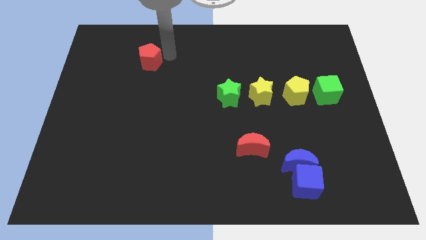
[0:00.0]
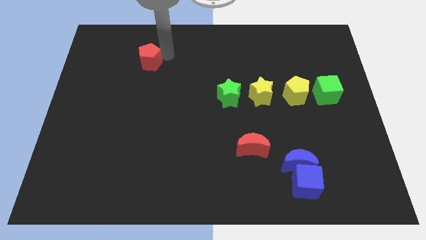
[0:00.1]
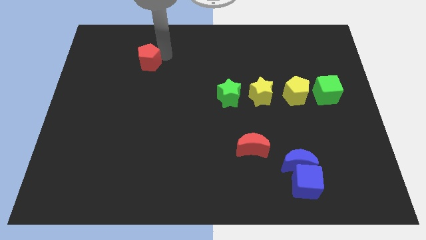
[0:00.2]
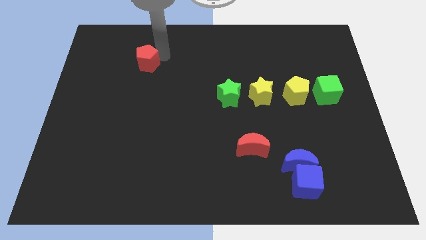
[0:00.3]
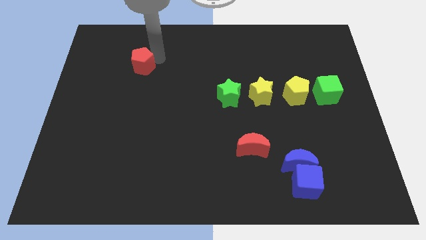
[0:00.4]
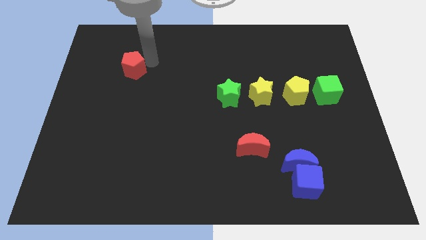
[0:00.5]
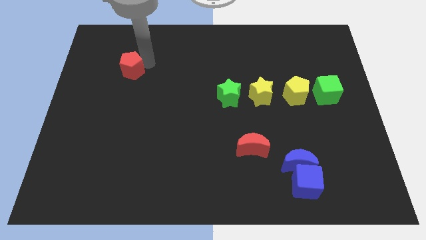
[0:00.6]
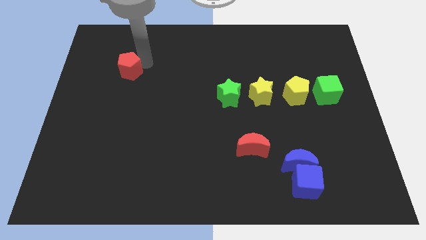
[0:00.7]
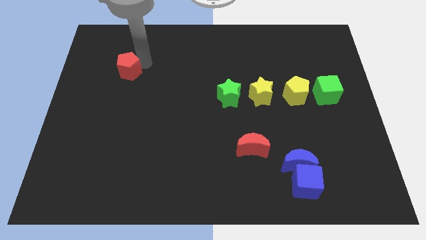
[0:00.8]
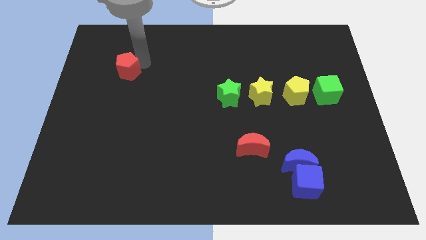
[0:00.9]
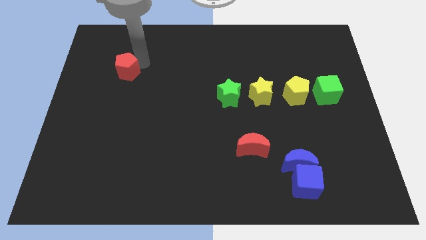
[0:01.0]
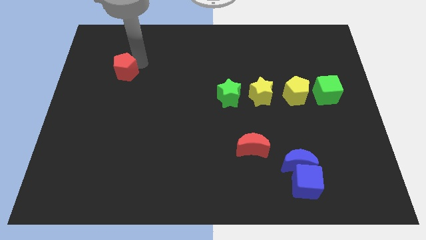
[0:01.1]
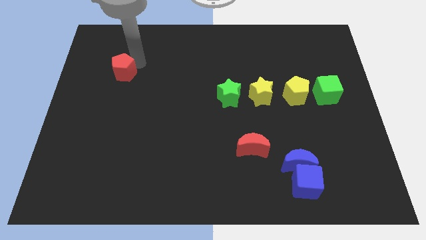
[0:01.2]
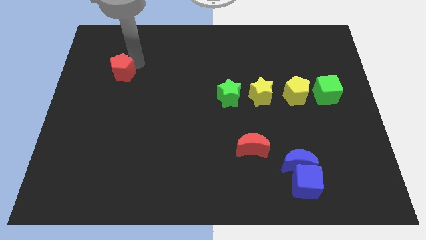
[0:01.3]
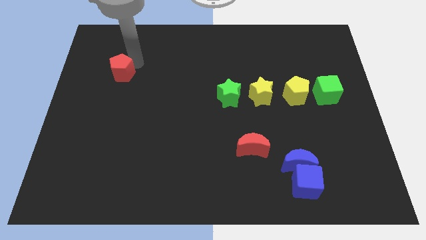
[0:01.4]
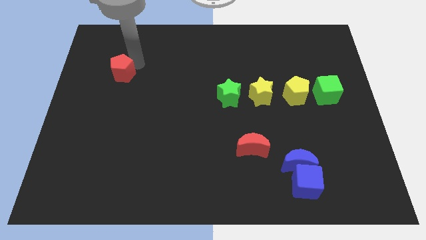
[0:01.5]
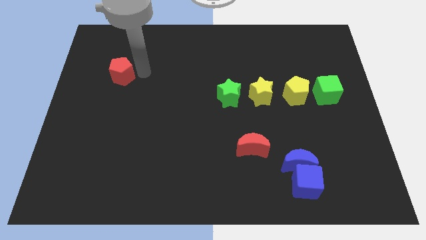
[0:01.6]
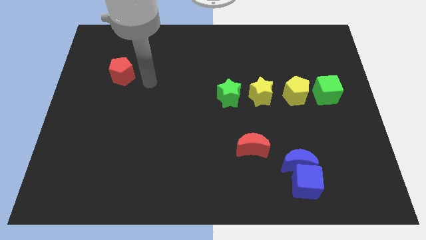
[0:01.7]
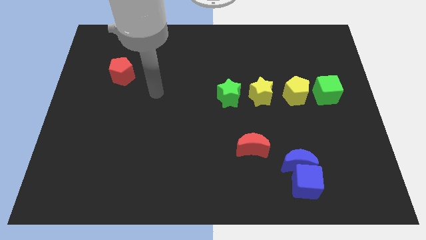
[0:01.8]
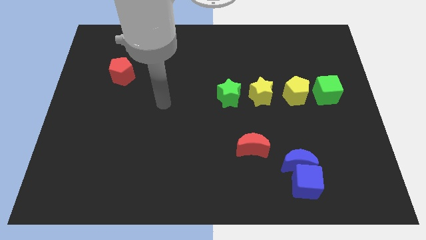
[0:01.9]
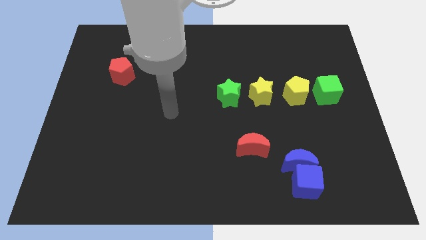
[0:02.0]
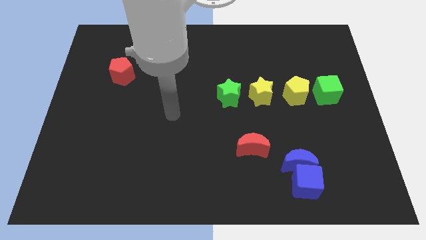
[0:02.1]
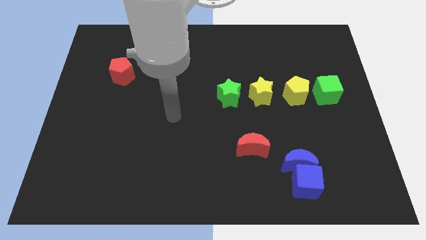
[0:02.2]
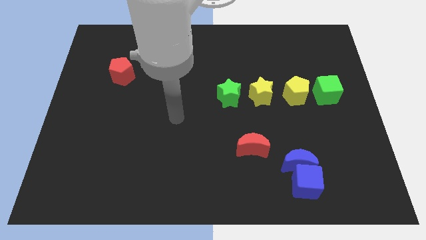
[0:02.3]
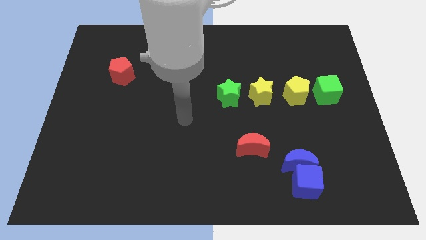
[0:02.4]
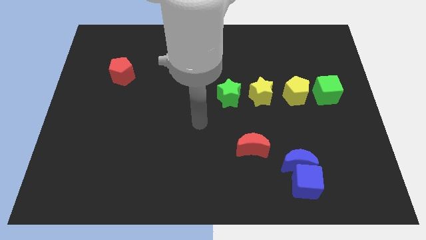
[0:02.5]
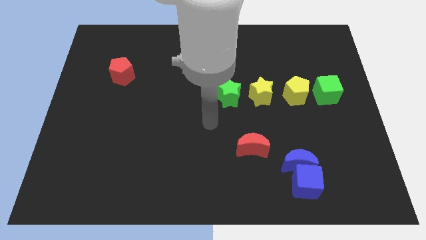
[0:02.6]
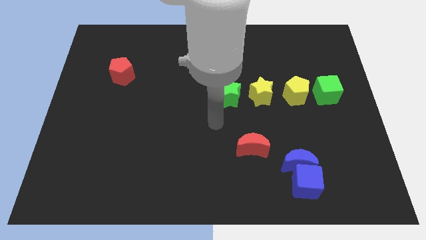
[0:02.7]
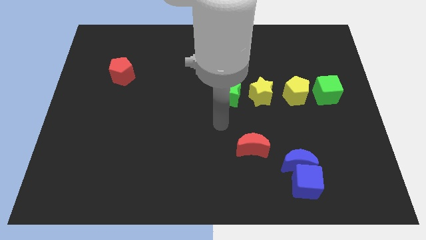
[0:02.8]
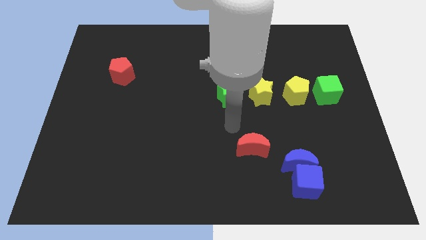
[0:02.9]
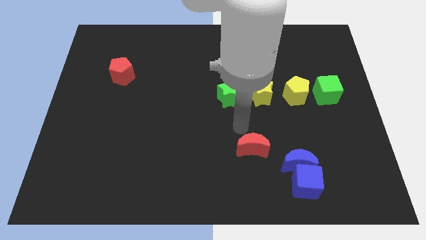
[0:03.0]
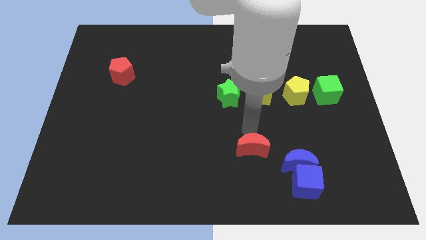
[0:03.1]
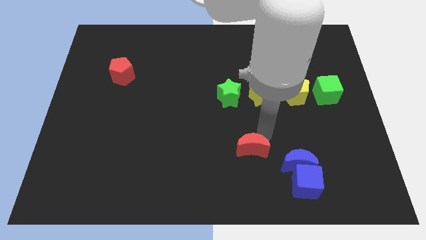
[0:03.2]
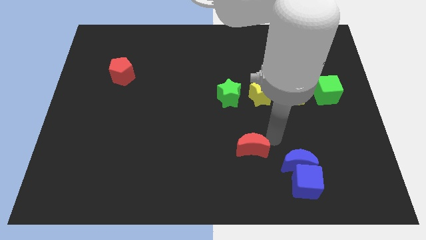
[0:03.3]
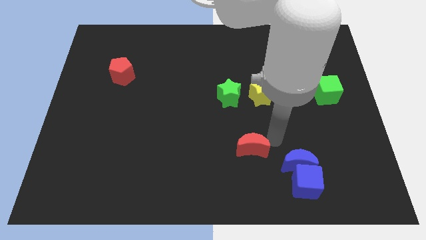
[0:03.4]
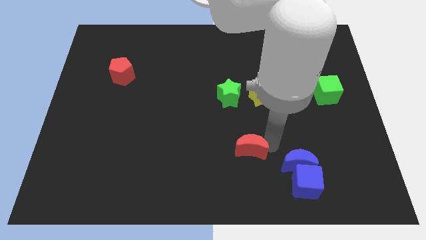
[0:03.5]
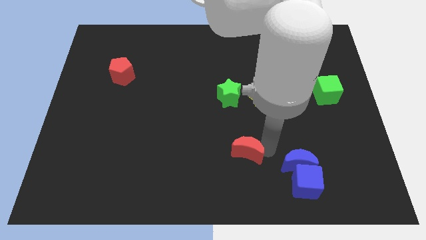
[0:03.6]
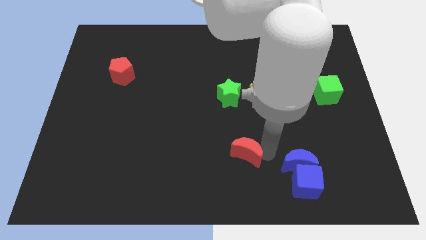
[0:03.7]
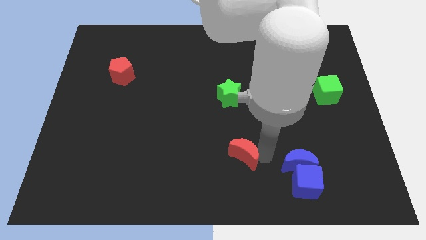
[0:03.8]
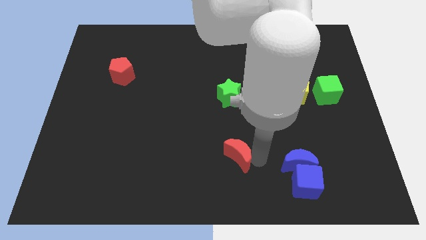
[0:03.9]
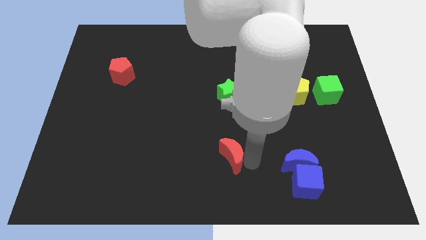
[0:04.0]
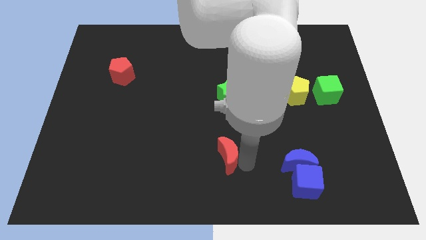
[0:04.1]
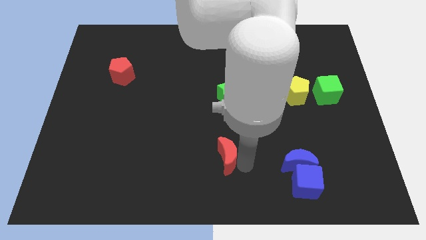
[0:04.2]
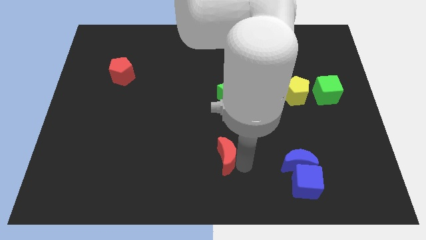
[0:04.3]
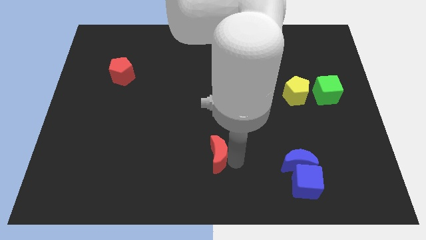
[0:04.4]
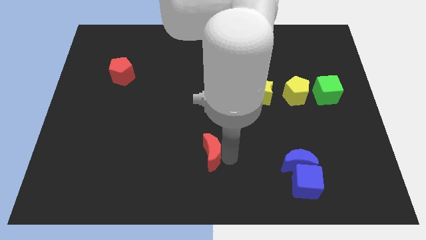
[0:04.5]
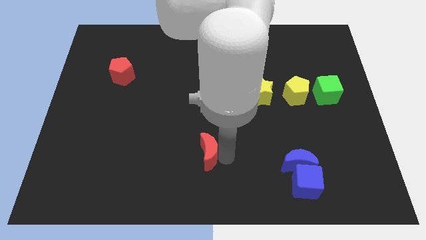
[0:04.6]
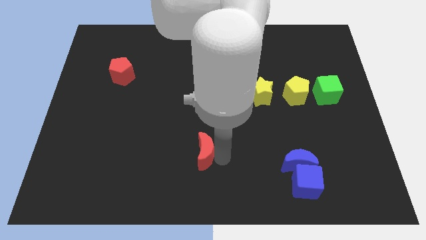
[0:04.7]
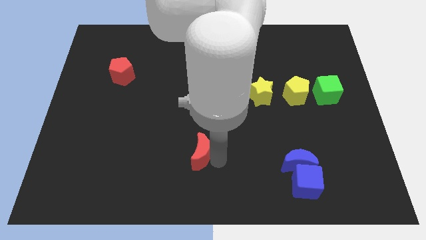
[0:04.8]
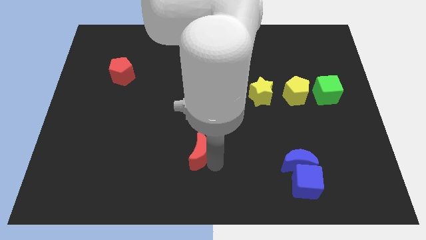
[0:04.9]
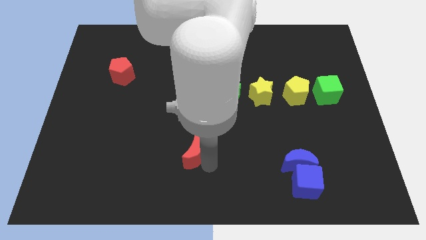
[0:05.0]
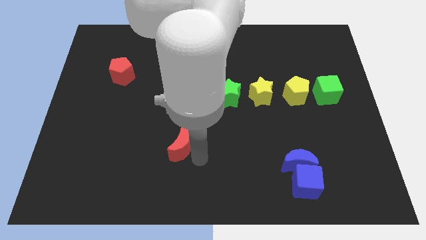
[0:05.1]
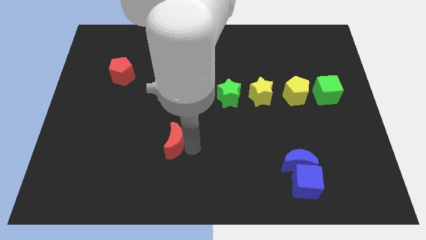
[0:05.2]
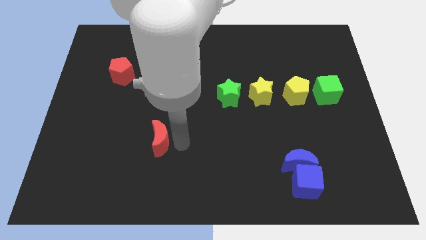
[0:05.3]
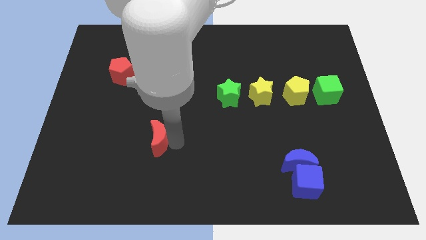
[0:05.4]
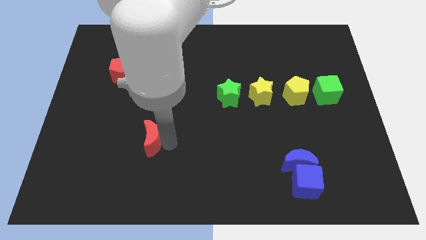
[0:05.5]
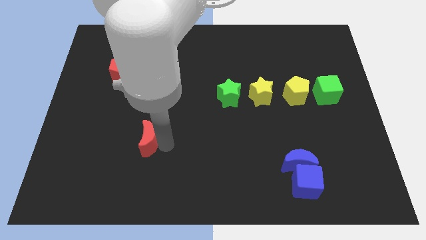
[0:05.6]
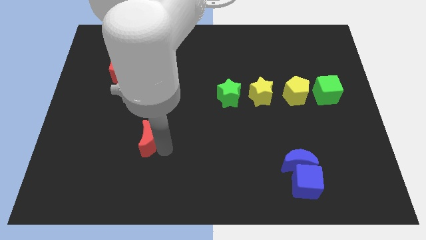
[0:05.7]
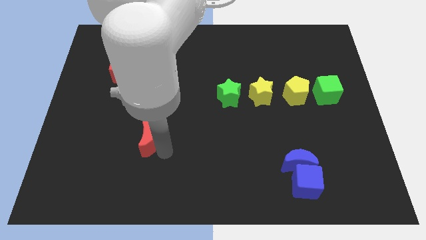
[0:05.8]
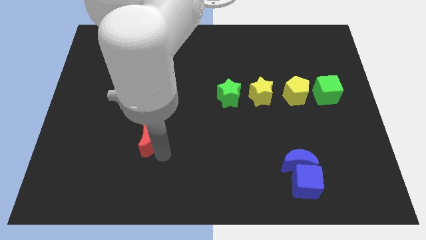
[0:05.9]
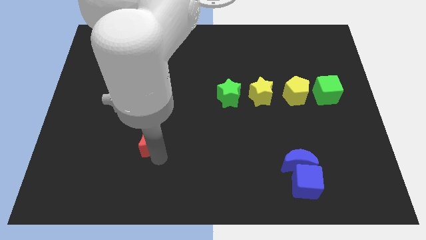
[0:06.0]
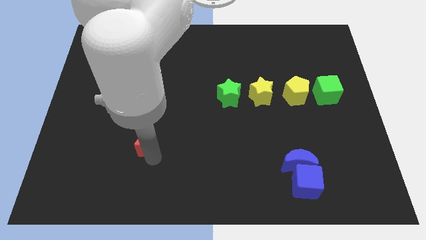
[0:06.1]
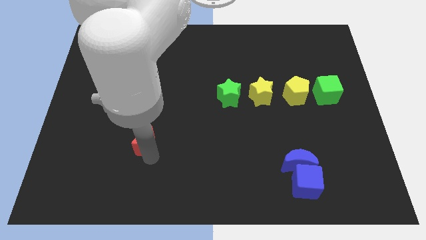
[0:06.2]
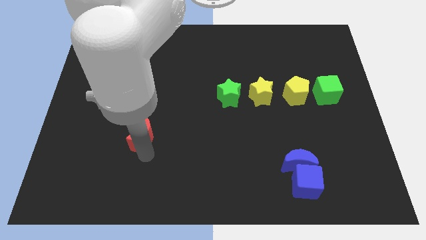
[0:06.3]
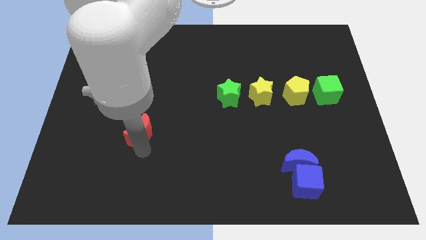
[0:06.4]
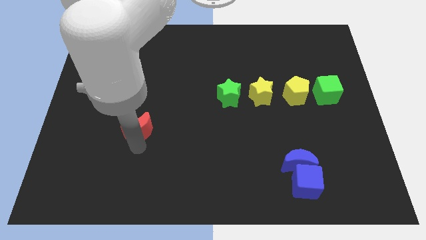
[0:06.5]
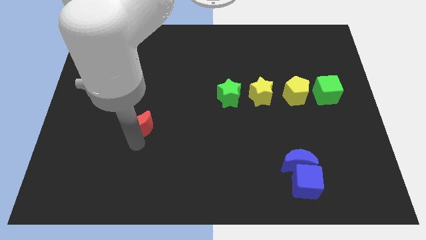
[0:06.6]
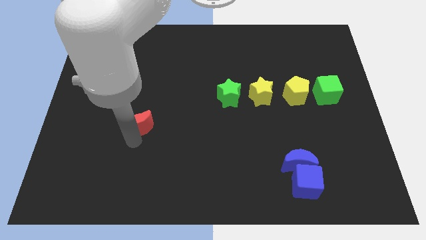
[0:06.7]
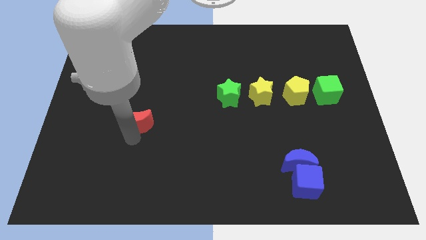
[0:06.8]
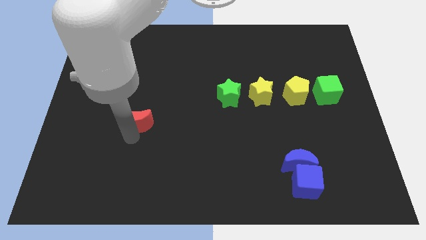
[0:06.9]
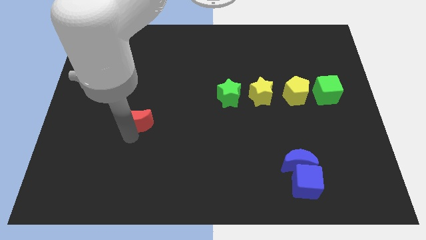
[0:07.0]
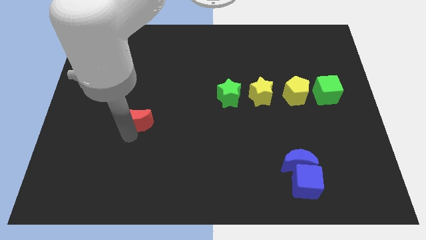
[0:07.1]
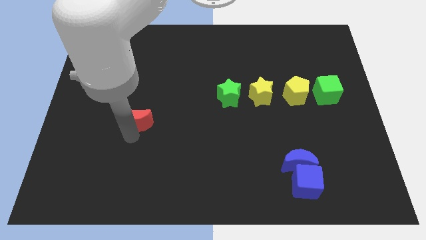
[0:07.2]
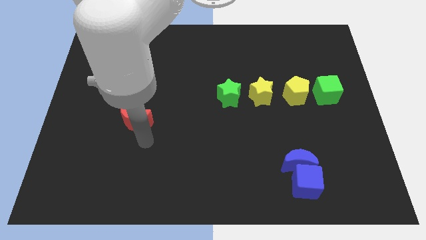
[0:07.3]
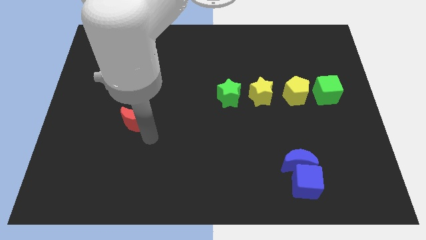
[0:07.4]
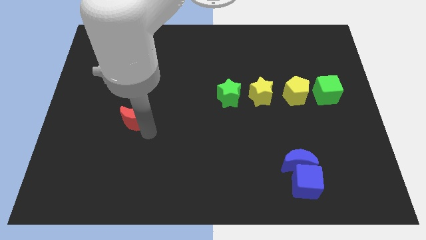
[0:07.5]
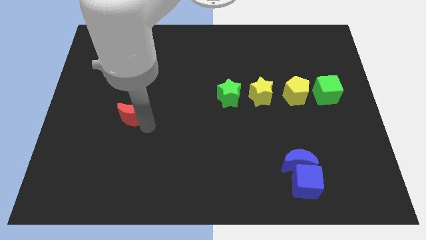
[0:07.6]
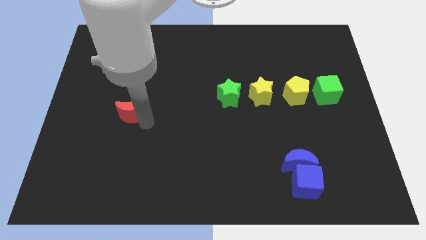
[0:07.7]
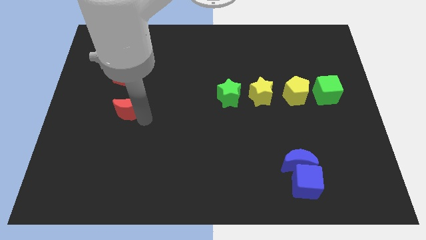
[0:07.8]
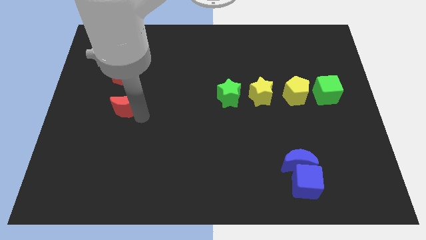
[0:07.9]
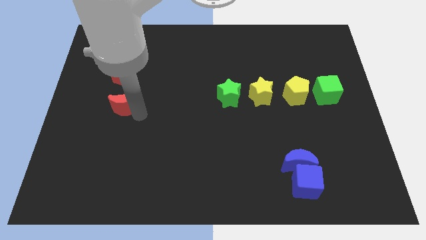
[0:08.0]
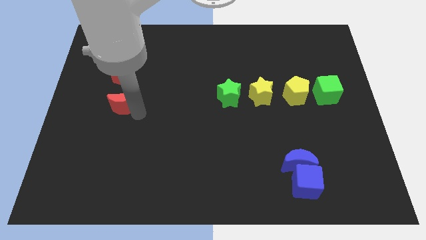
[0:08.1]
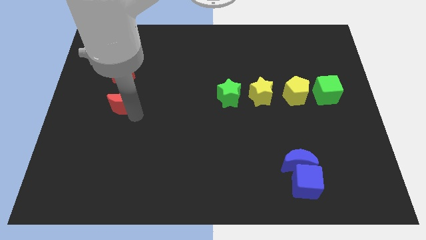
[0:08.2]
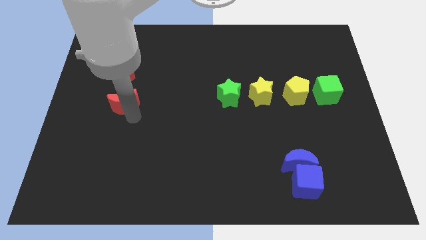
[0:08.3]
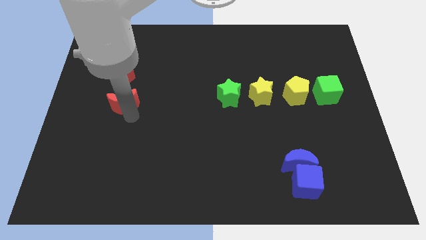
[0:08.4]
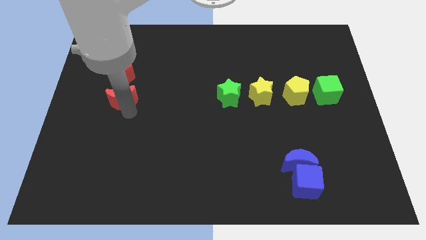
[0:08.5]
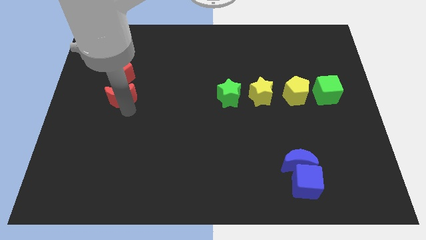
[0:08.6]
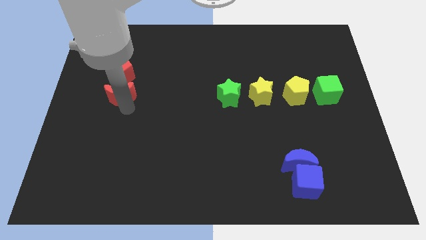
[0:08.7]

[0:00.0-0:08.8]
form a vertical line with two red colored blocks

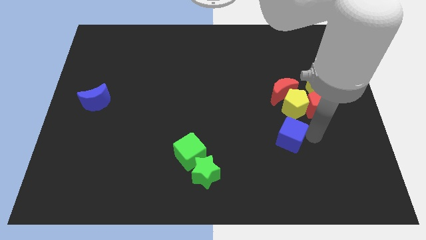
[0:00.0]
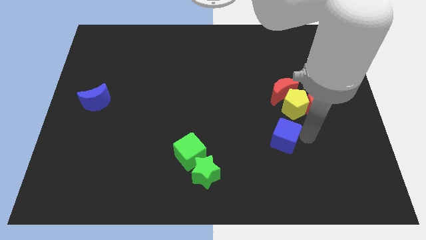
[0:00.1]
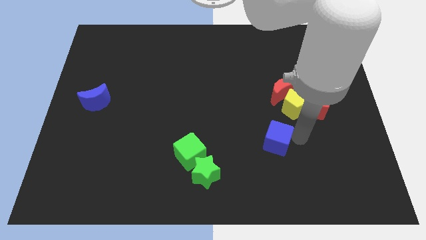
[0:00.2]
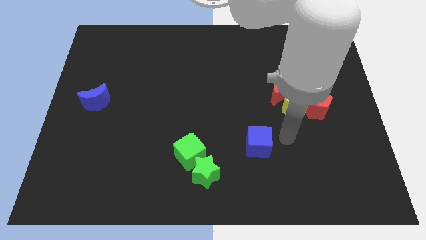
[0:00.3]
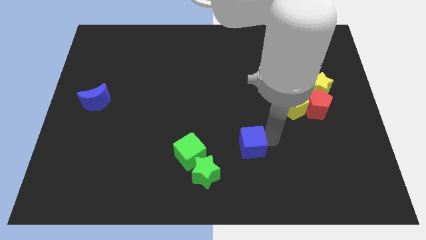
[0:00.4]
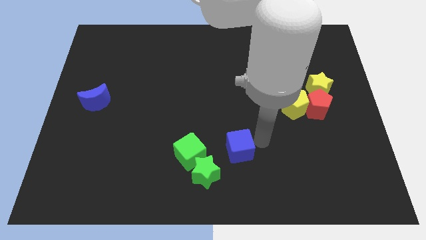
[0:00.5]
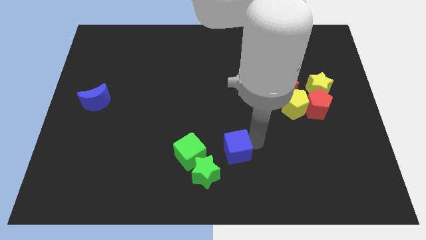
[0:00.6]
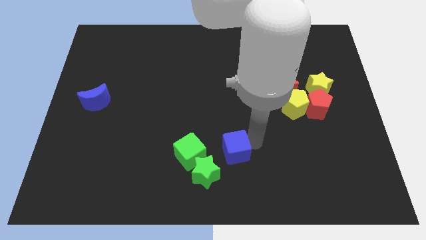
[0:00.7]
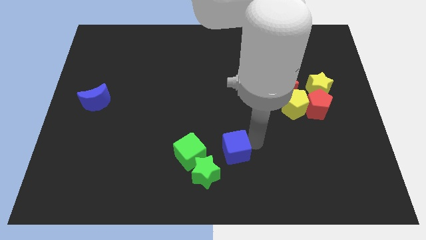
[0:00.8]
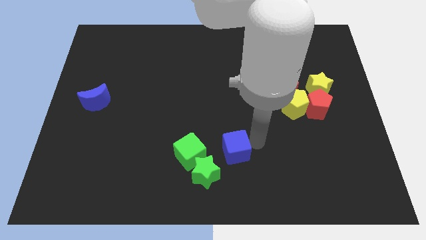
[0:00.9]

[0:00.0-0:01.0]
place blue cube towards the right of the green cube
